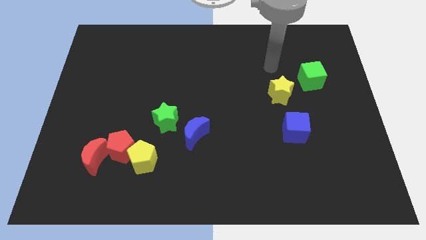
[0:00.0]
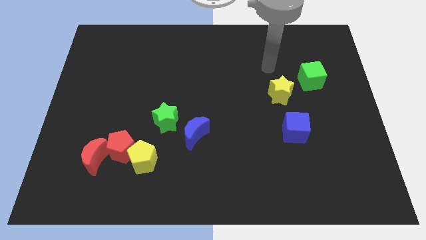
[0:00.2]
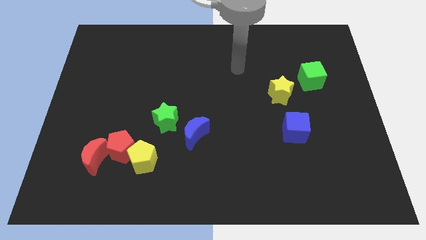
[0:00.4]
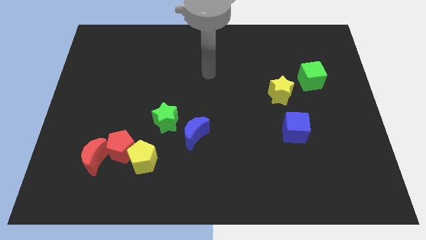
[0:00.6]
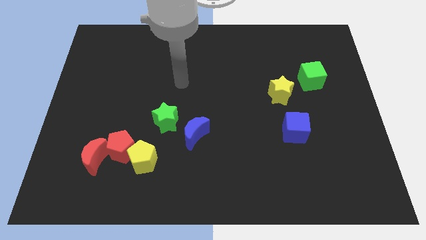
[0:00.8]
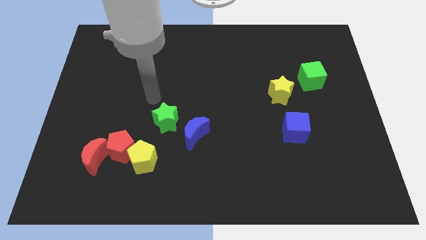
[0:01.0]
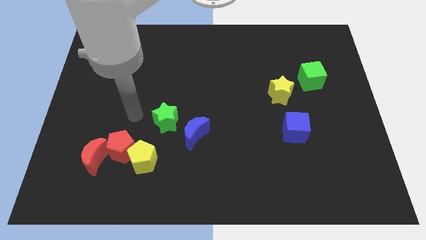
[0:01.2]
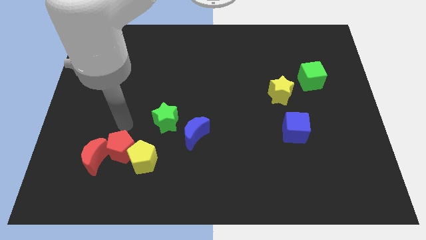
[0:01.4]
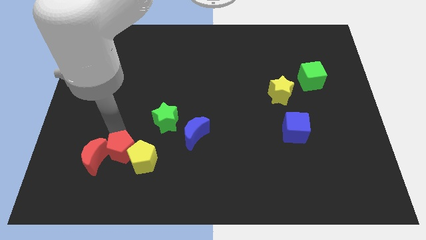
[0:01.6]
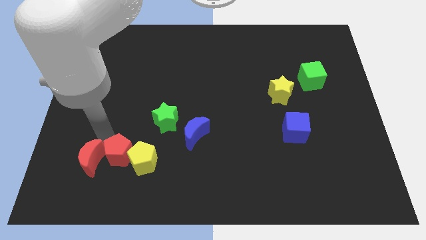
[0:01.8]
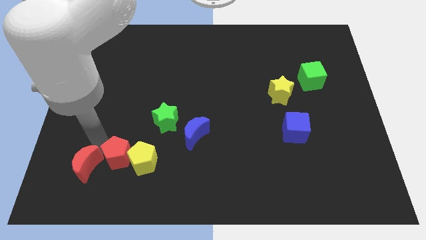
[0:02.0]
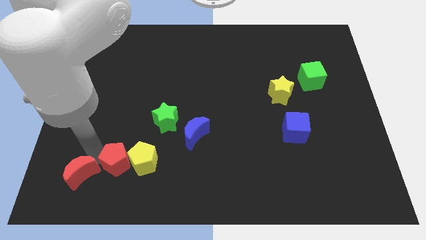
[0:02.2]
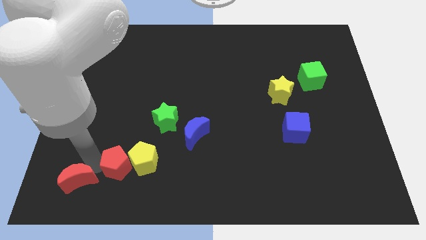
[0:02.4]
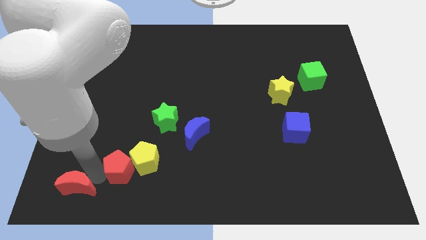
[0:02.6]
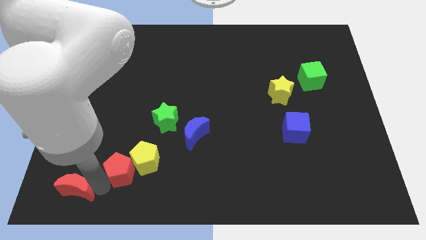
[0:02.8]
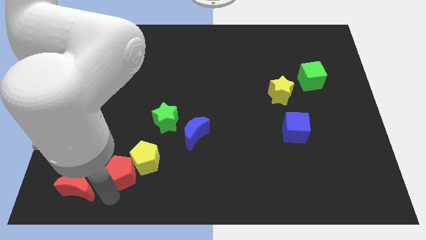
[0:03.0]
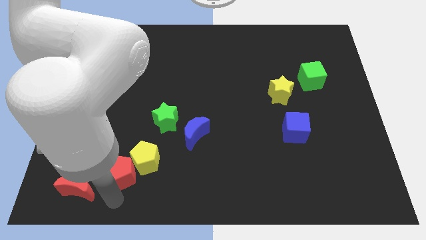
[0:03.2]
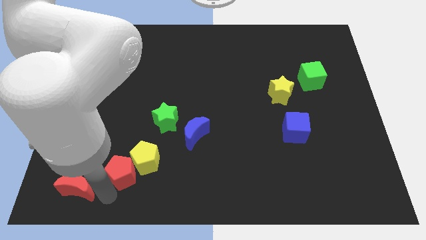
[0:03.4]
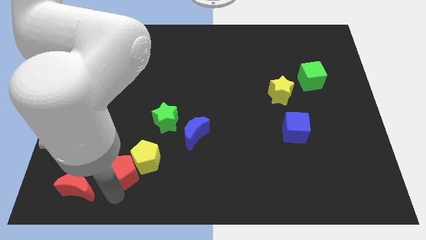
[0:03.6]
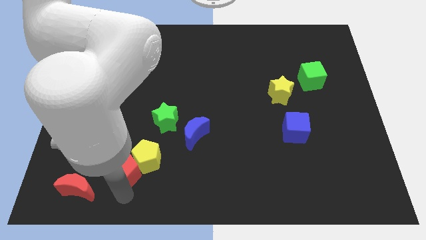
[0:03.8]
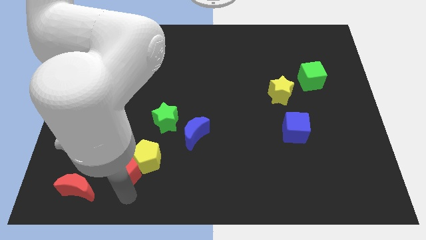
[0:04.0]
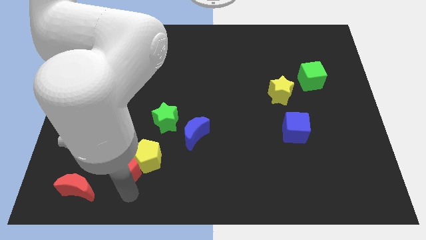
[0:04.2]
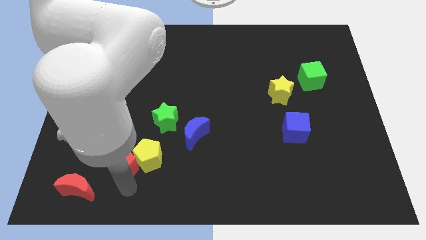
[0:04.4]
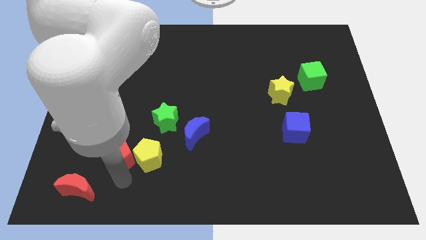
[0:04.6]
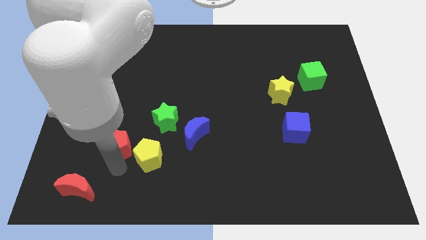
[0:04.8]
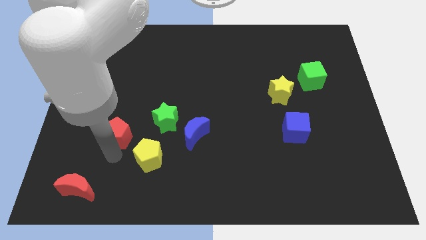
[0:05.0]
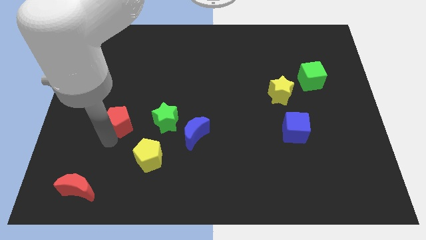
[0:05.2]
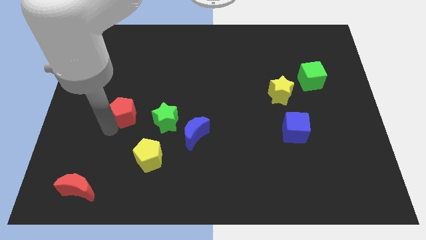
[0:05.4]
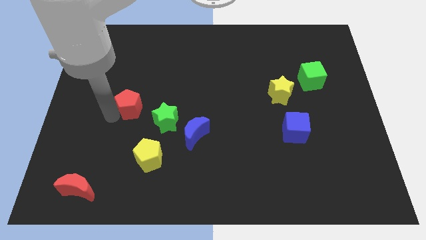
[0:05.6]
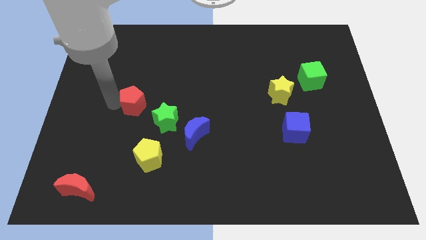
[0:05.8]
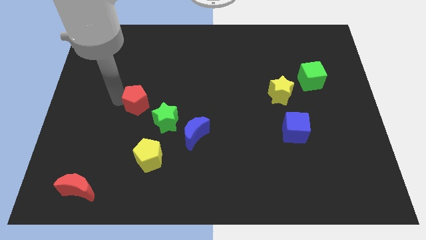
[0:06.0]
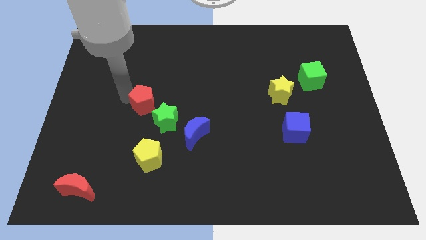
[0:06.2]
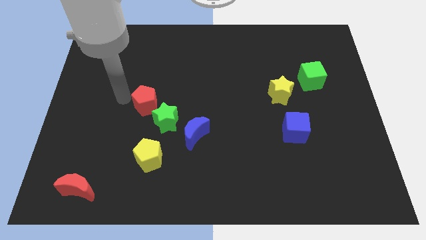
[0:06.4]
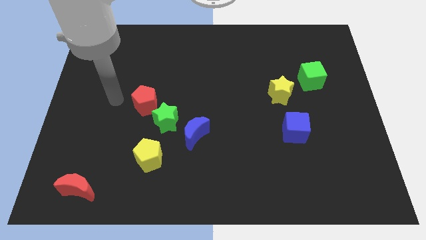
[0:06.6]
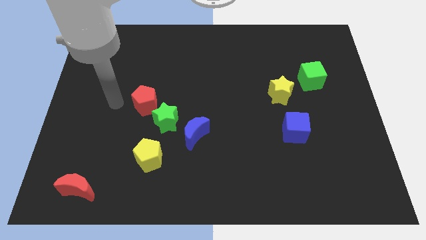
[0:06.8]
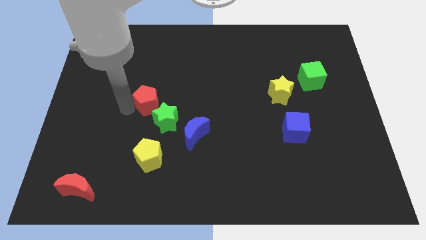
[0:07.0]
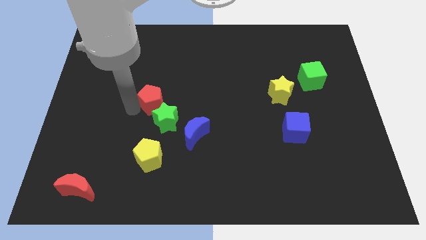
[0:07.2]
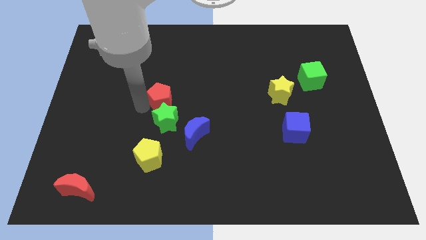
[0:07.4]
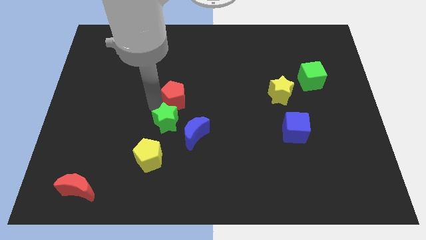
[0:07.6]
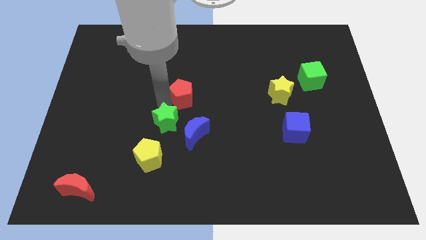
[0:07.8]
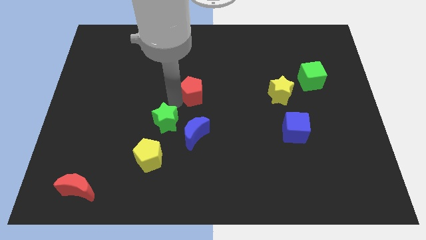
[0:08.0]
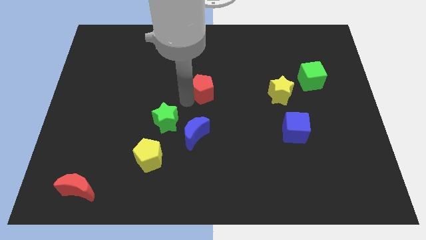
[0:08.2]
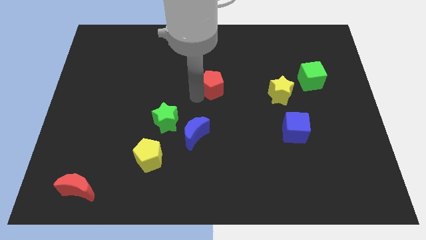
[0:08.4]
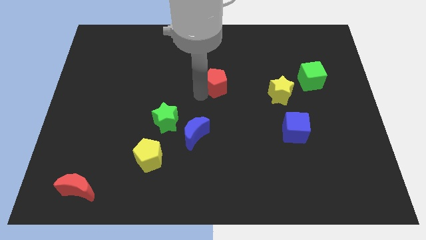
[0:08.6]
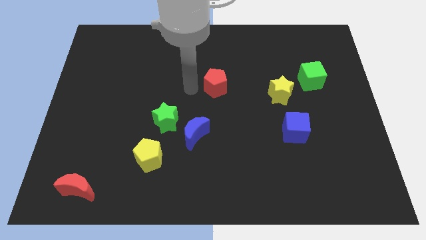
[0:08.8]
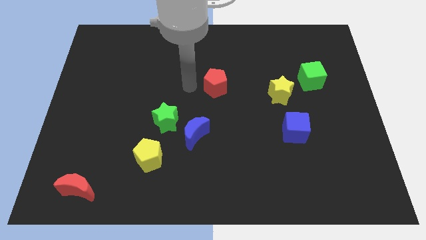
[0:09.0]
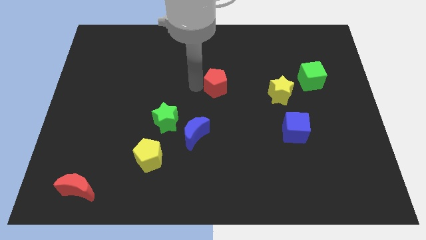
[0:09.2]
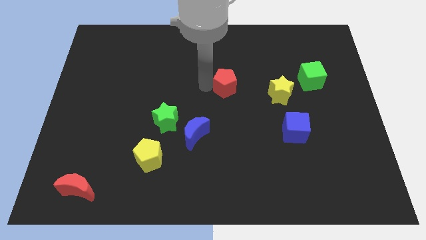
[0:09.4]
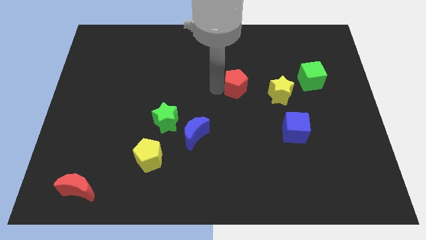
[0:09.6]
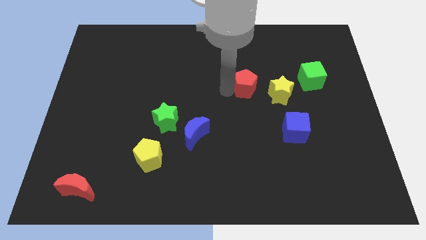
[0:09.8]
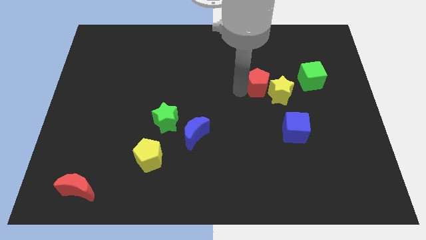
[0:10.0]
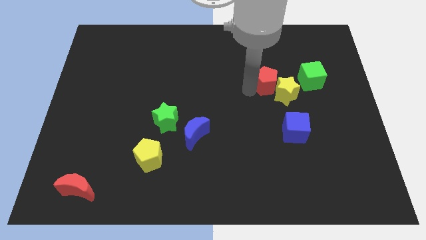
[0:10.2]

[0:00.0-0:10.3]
slide the red pentagon towards the yellow star

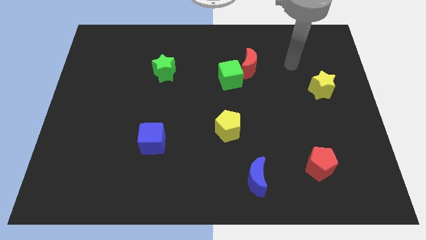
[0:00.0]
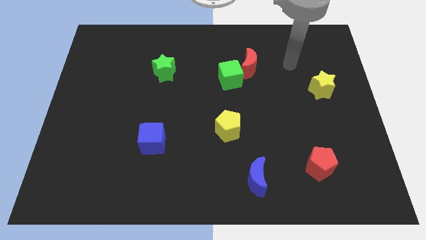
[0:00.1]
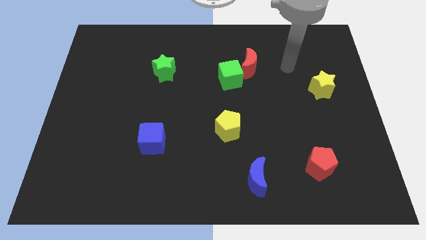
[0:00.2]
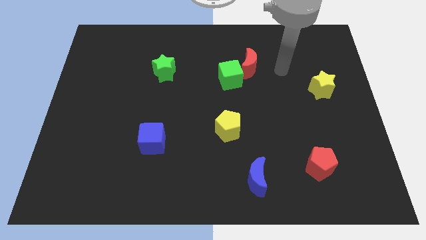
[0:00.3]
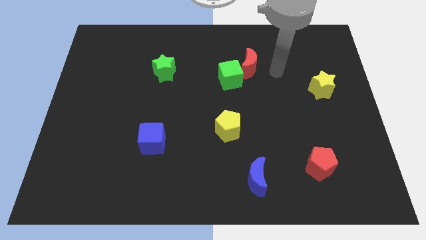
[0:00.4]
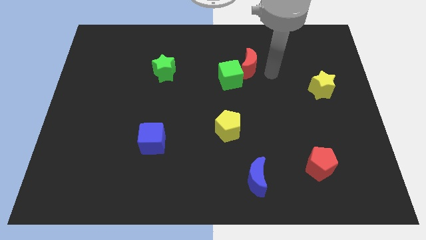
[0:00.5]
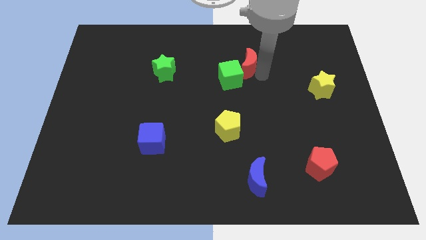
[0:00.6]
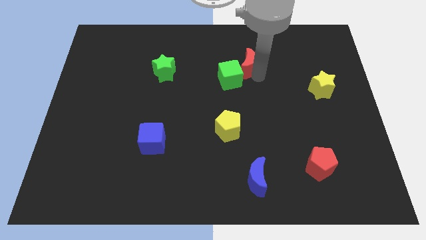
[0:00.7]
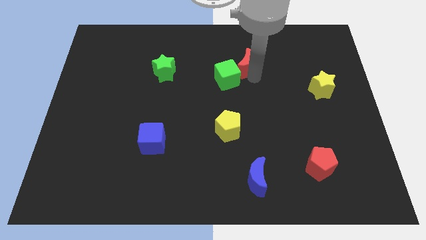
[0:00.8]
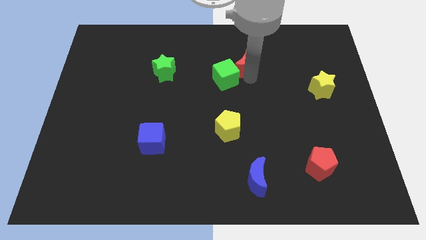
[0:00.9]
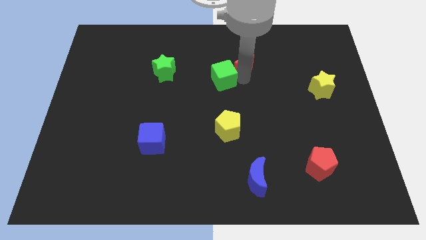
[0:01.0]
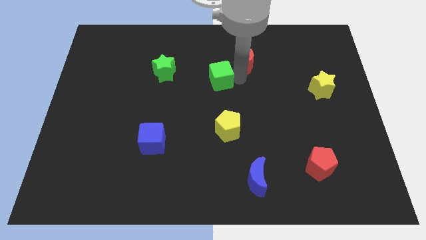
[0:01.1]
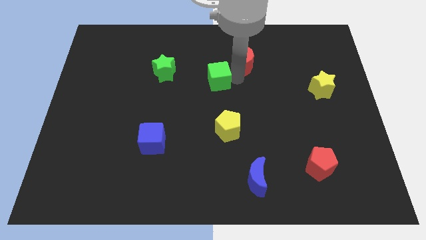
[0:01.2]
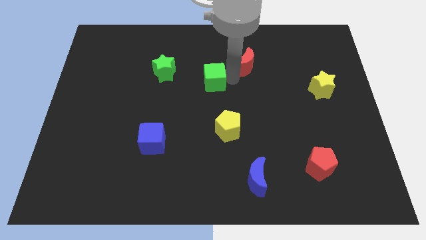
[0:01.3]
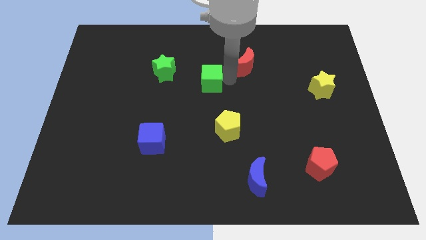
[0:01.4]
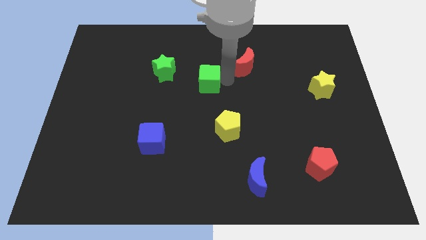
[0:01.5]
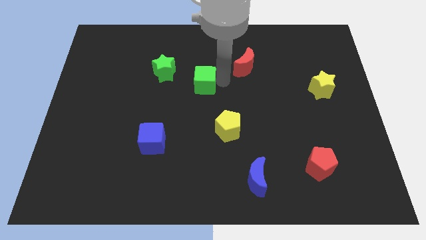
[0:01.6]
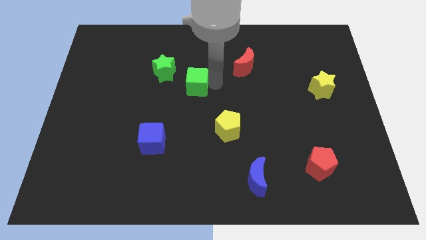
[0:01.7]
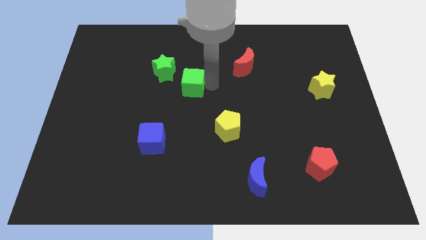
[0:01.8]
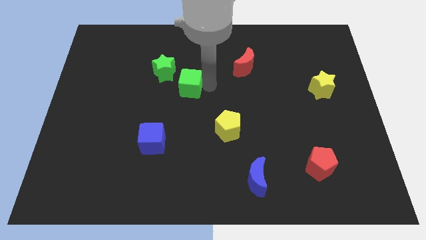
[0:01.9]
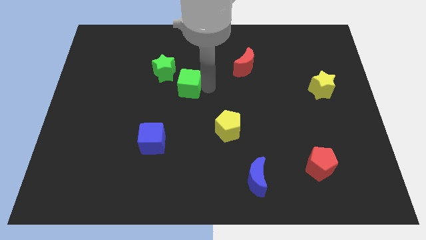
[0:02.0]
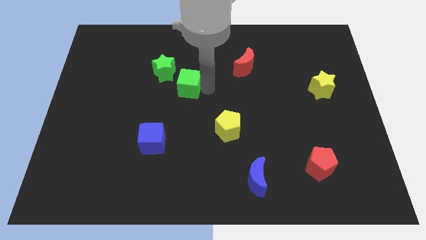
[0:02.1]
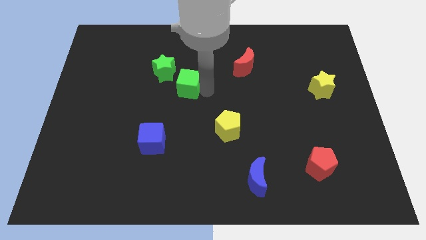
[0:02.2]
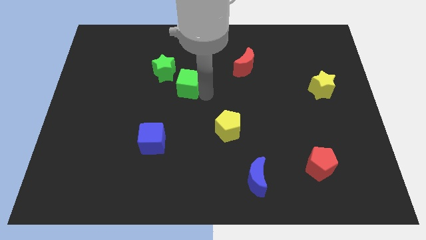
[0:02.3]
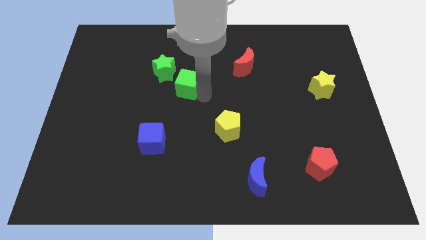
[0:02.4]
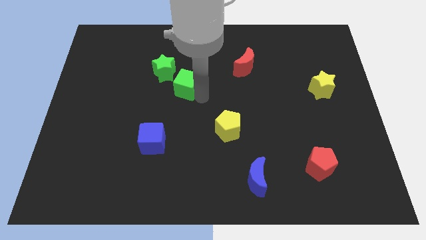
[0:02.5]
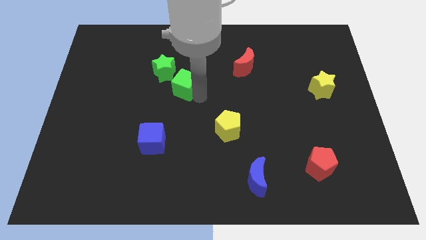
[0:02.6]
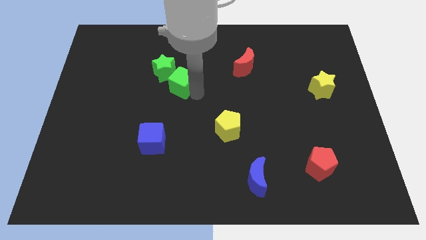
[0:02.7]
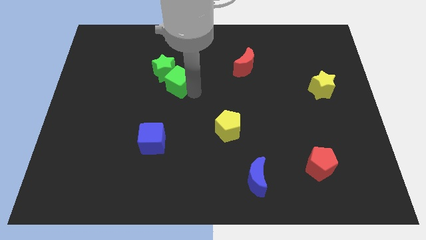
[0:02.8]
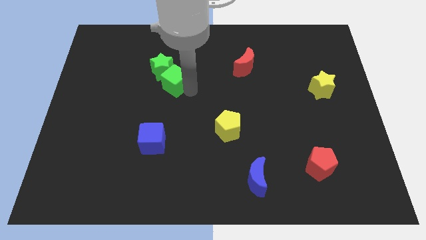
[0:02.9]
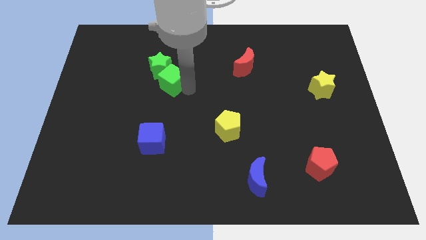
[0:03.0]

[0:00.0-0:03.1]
move the green cube close to the green star
